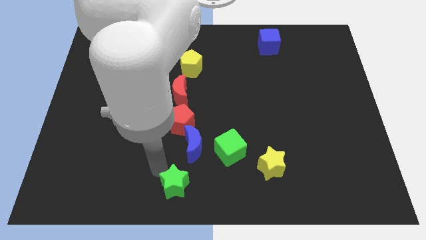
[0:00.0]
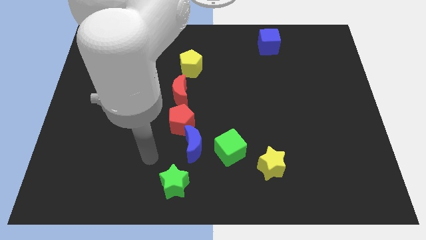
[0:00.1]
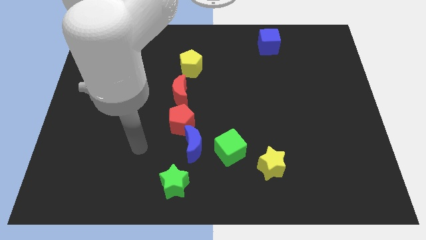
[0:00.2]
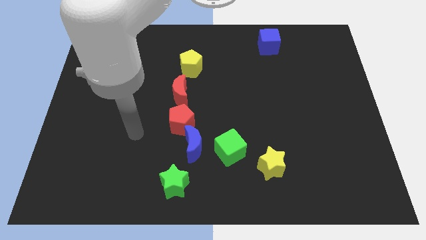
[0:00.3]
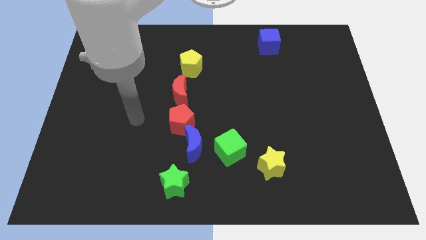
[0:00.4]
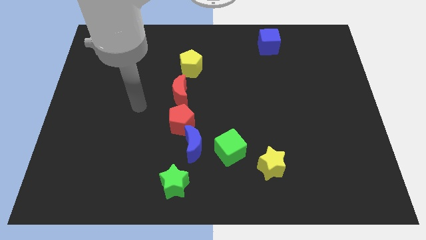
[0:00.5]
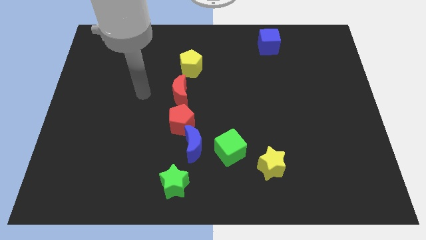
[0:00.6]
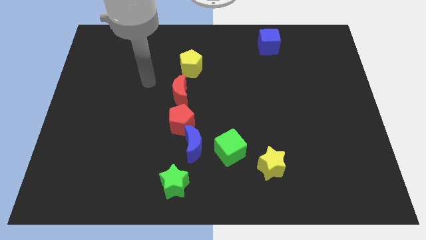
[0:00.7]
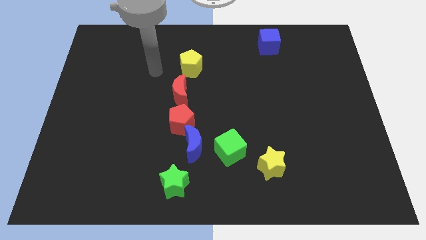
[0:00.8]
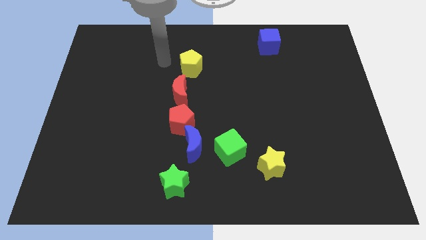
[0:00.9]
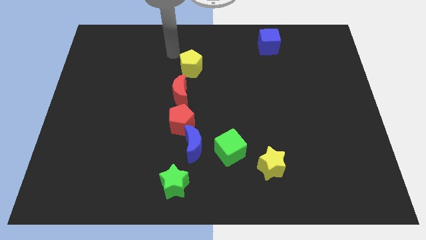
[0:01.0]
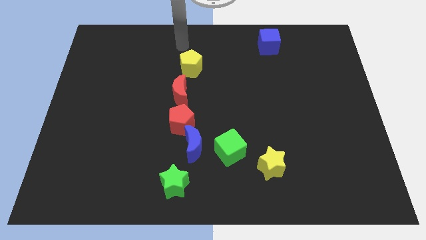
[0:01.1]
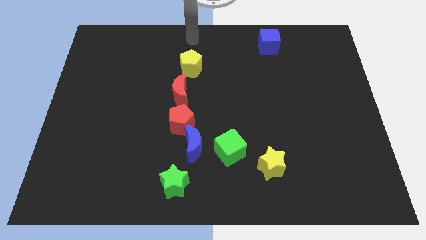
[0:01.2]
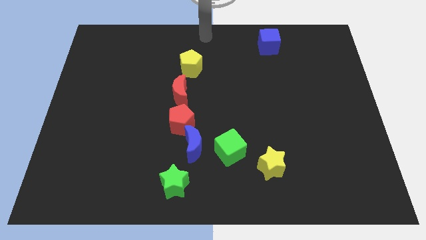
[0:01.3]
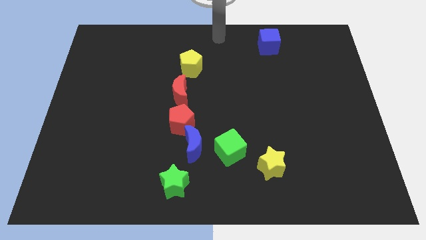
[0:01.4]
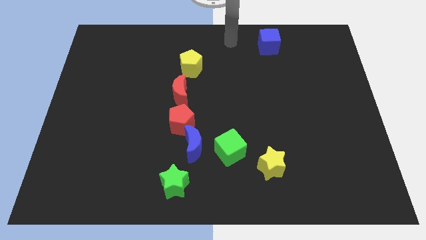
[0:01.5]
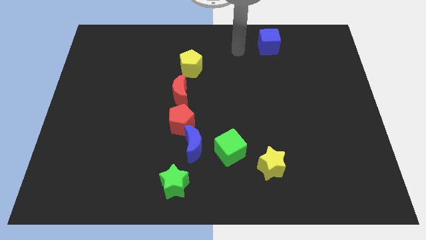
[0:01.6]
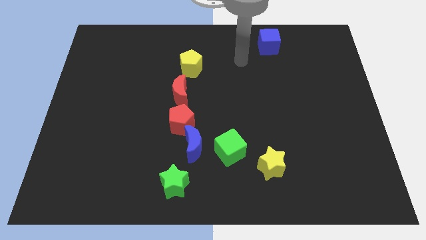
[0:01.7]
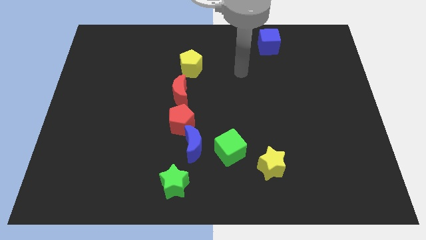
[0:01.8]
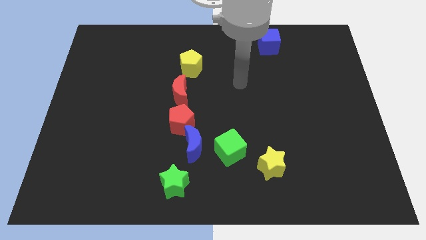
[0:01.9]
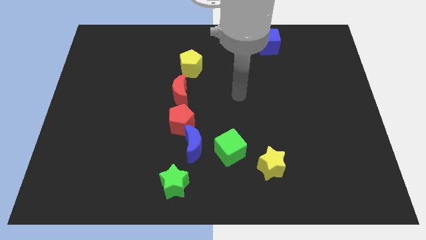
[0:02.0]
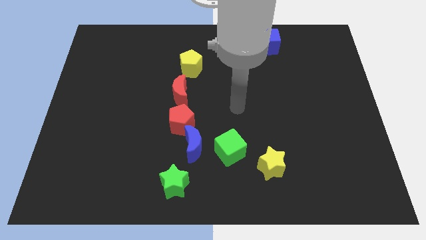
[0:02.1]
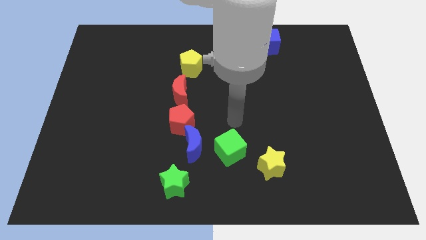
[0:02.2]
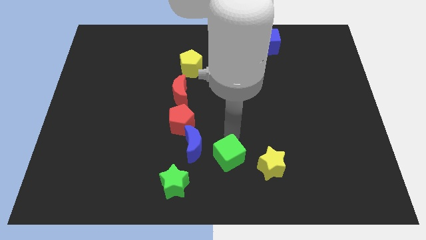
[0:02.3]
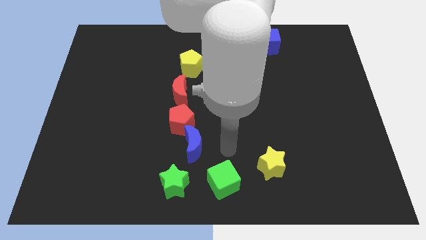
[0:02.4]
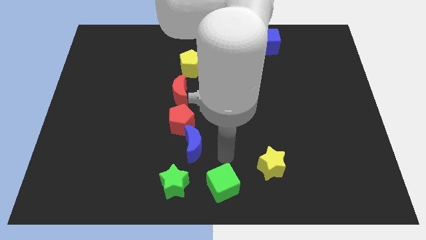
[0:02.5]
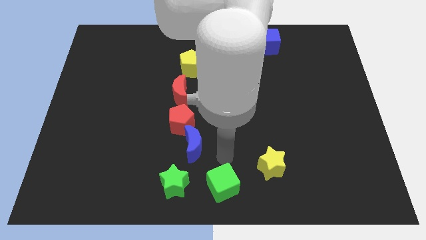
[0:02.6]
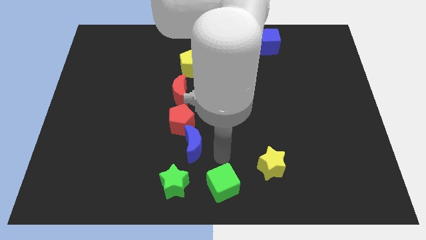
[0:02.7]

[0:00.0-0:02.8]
place green cube to the right of green star

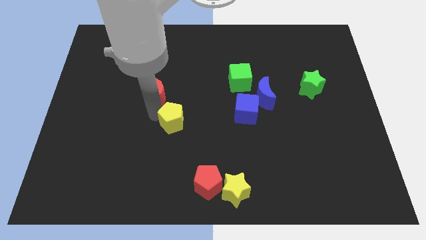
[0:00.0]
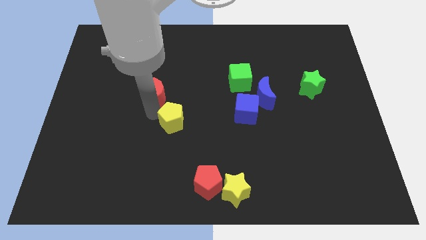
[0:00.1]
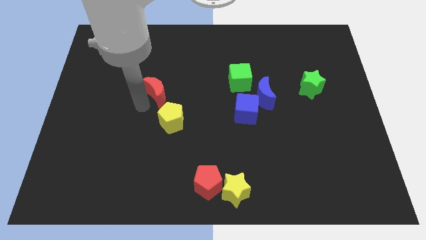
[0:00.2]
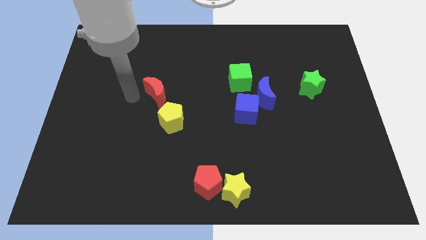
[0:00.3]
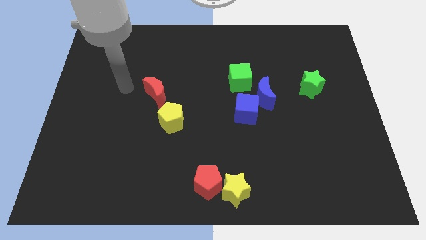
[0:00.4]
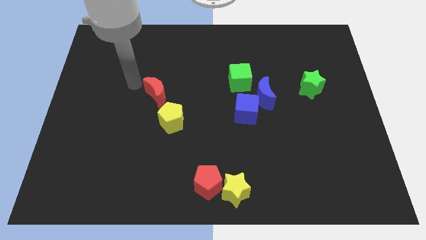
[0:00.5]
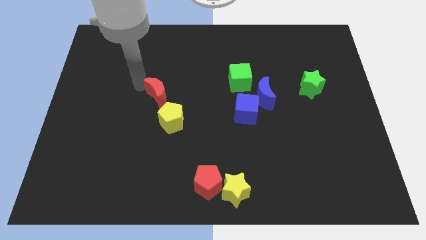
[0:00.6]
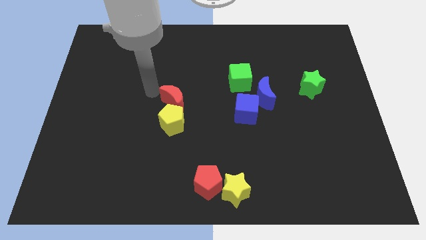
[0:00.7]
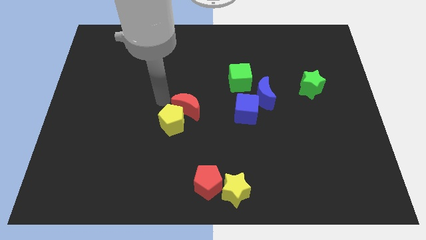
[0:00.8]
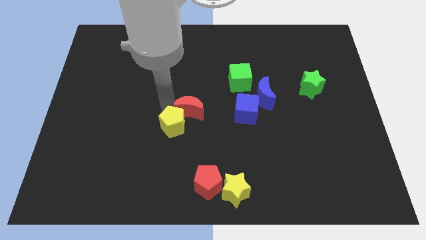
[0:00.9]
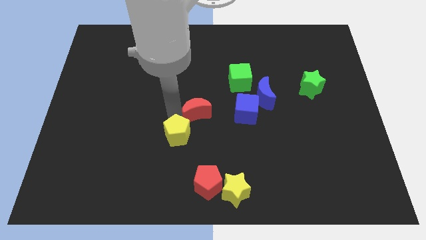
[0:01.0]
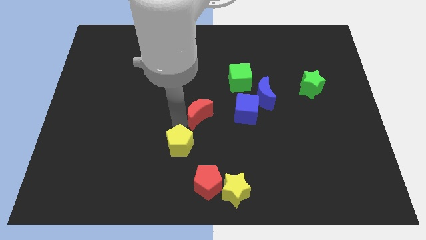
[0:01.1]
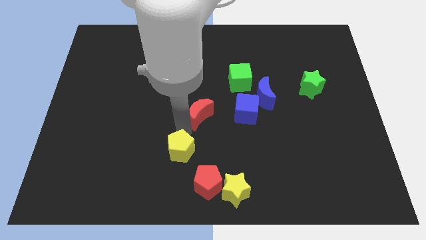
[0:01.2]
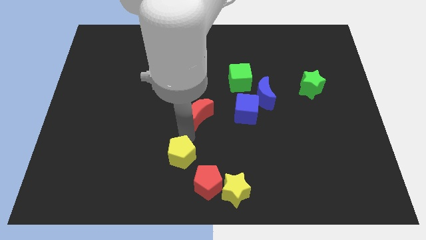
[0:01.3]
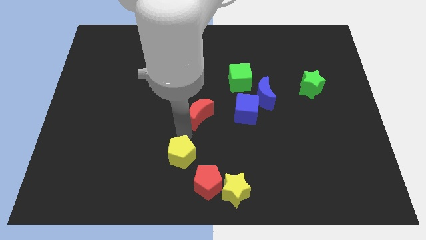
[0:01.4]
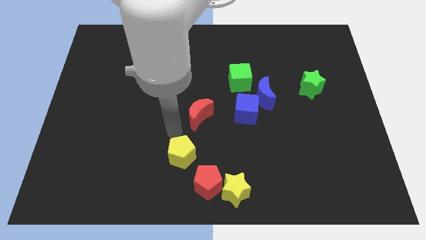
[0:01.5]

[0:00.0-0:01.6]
separate the red moon and the yellow pentagon

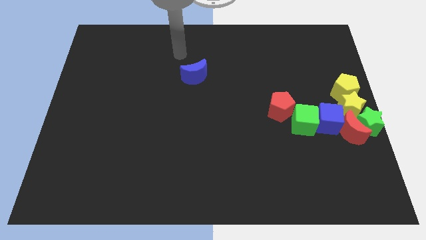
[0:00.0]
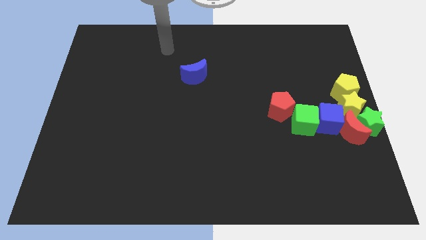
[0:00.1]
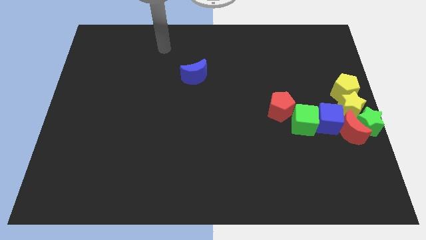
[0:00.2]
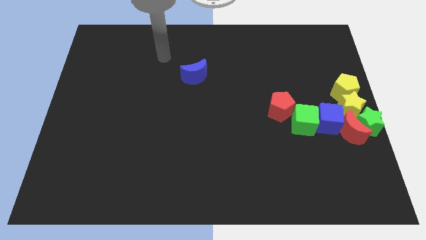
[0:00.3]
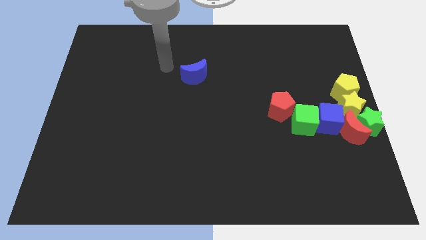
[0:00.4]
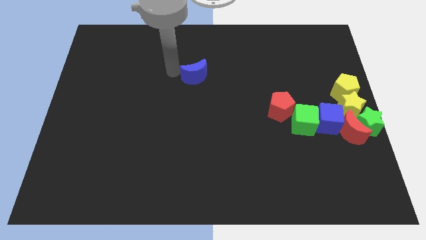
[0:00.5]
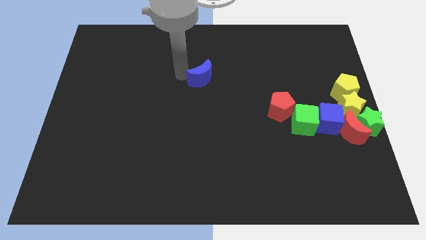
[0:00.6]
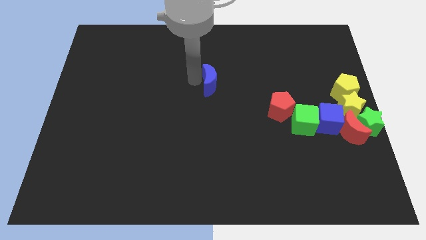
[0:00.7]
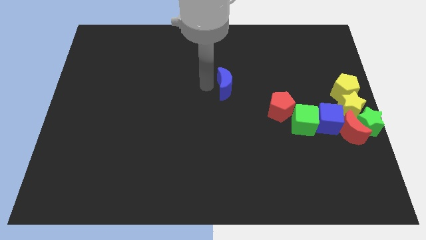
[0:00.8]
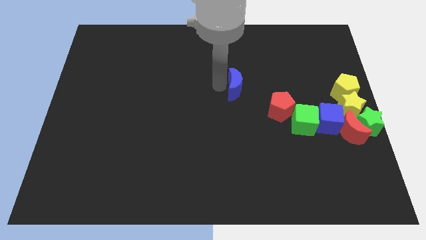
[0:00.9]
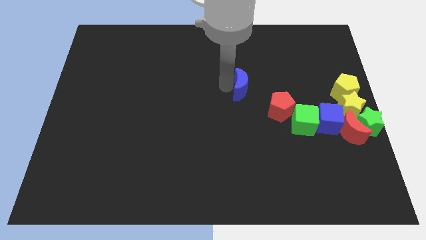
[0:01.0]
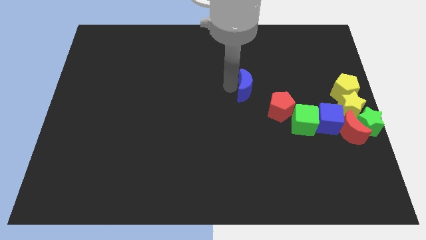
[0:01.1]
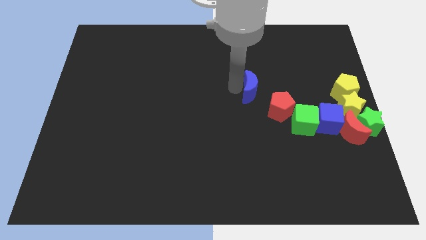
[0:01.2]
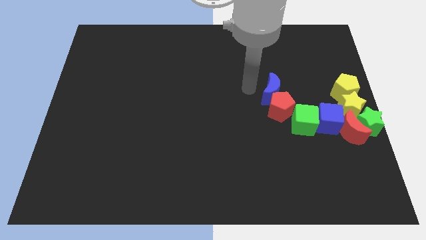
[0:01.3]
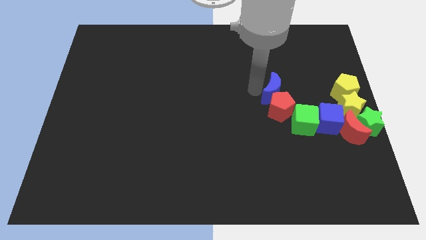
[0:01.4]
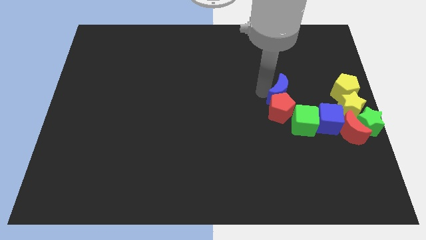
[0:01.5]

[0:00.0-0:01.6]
move the blue crescent above the red pentagon

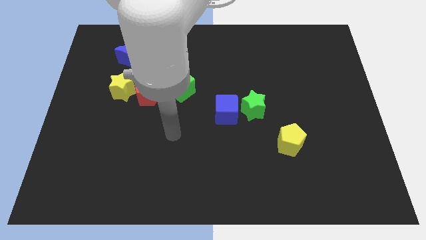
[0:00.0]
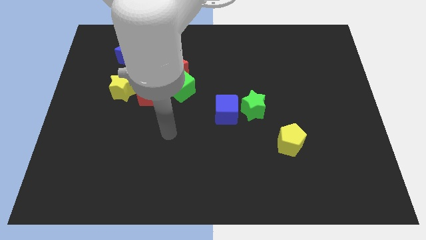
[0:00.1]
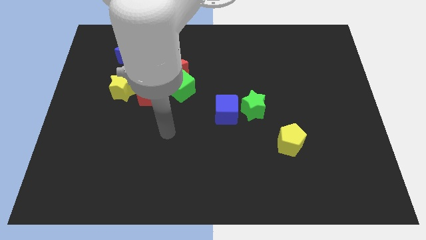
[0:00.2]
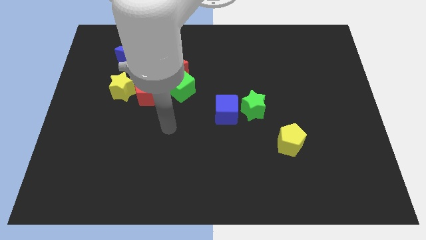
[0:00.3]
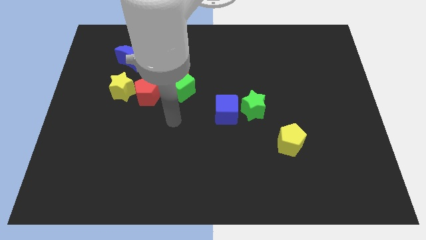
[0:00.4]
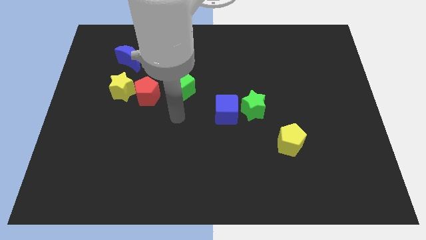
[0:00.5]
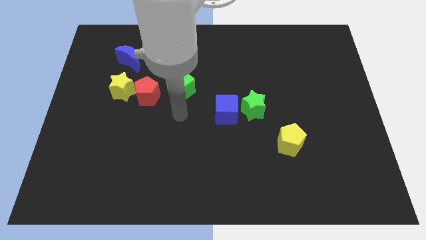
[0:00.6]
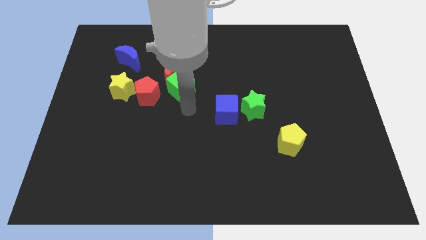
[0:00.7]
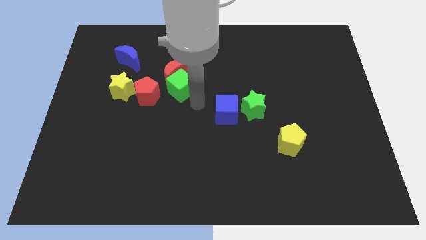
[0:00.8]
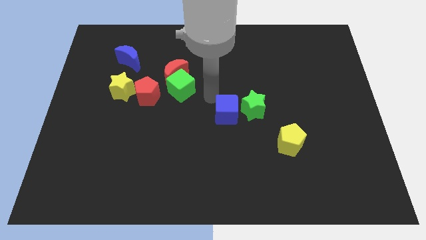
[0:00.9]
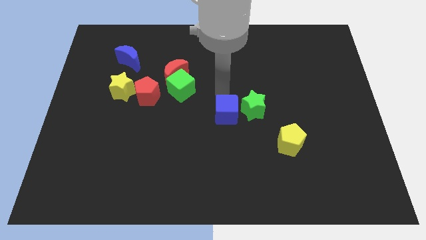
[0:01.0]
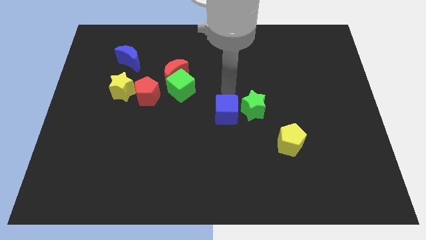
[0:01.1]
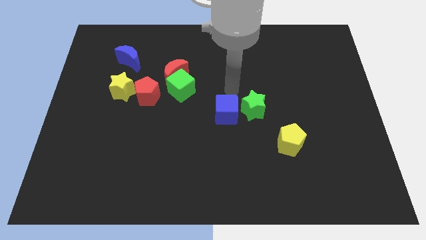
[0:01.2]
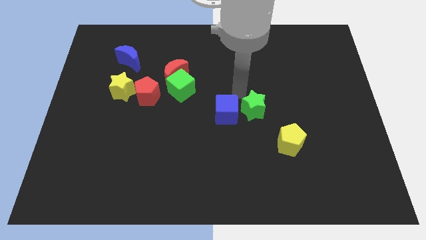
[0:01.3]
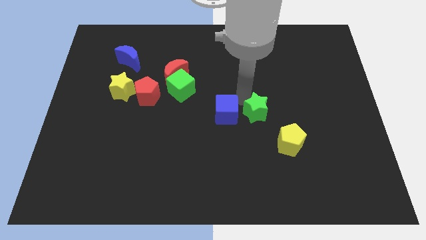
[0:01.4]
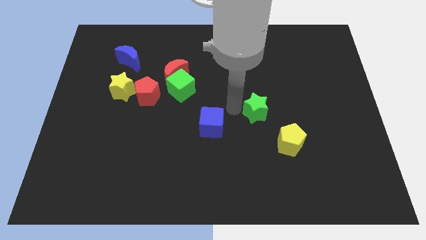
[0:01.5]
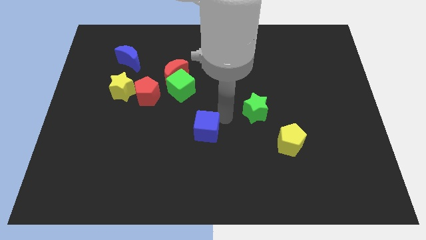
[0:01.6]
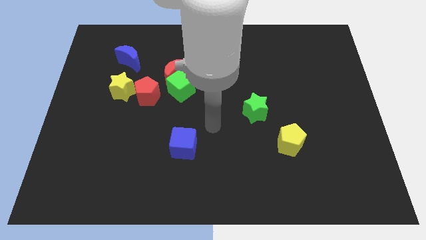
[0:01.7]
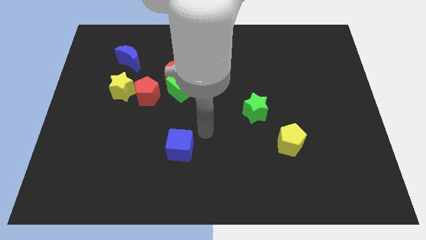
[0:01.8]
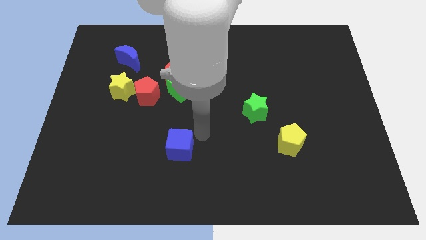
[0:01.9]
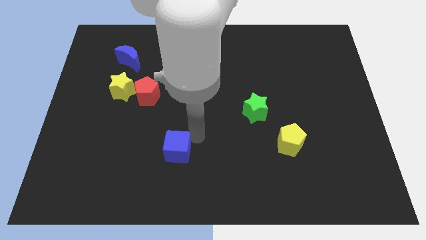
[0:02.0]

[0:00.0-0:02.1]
separate blue cube from green star

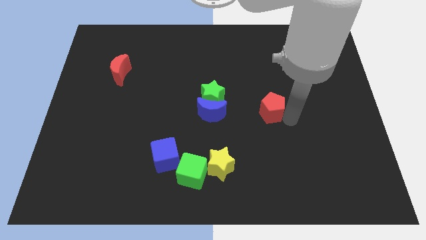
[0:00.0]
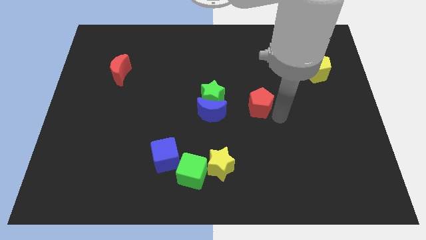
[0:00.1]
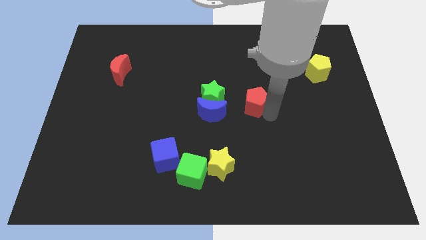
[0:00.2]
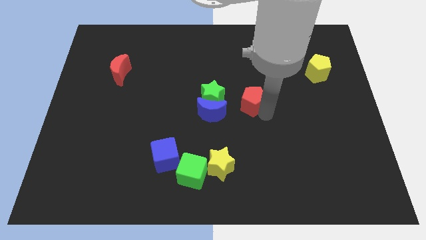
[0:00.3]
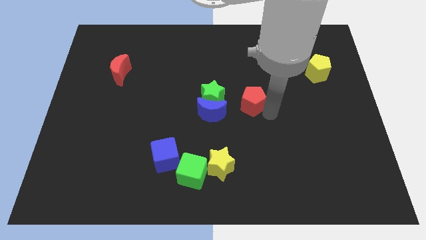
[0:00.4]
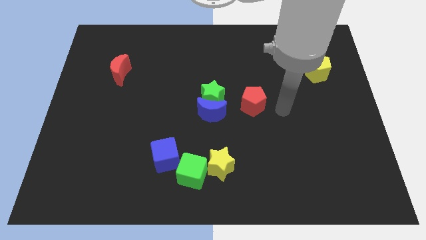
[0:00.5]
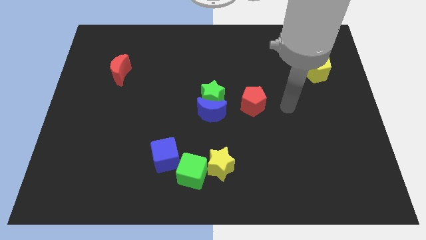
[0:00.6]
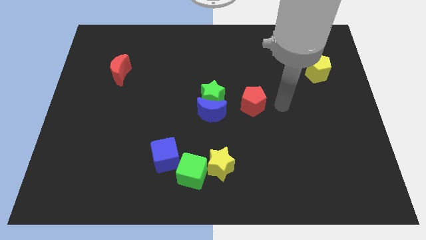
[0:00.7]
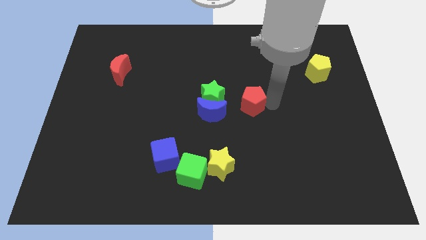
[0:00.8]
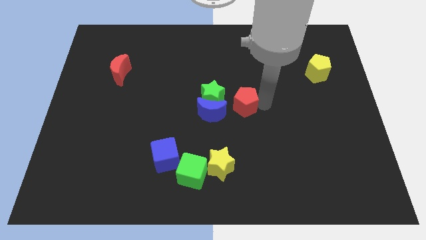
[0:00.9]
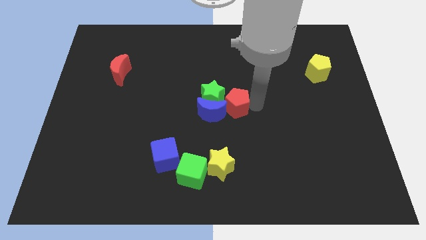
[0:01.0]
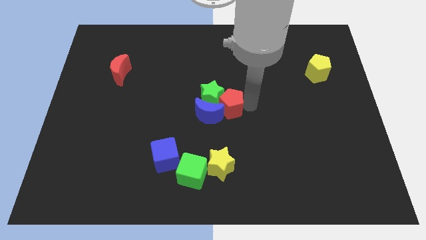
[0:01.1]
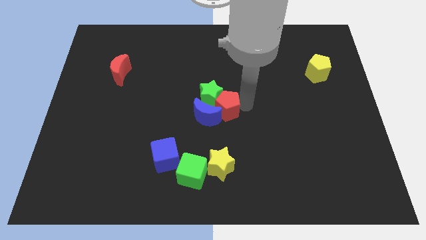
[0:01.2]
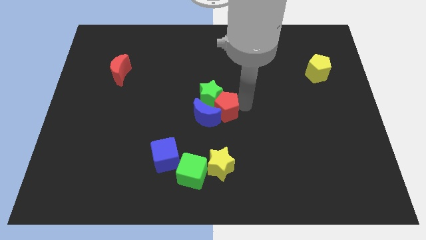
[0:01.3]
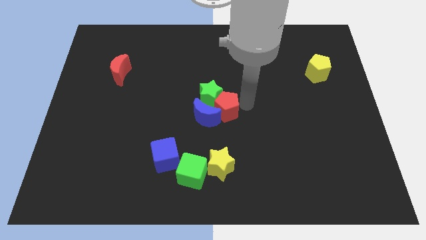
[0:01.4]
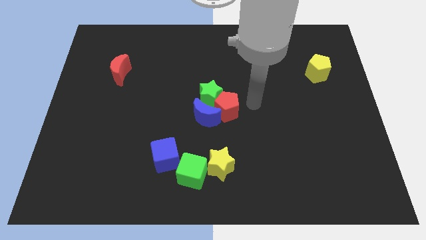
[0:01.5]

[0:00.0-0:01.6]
drag the red pentagon to the left
